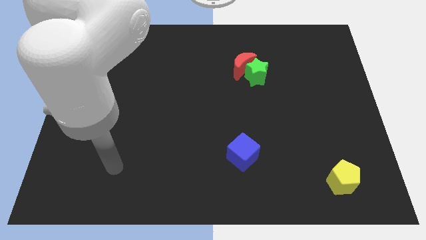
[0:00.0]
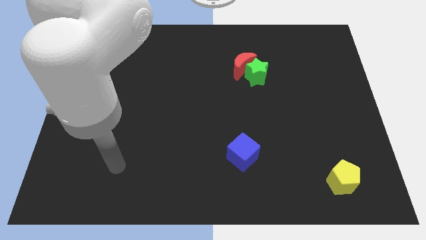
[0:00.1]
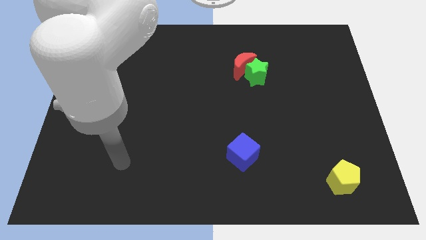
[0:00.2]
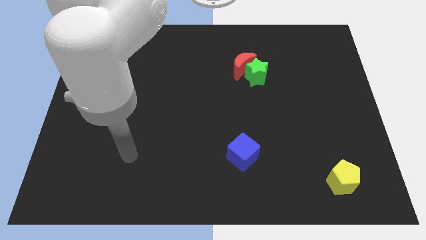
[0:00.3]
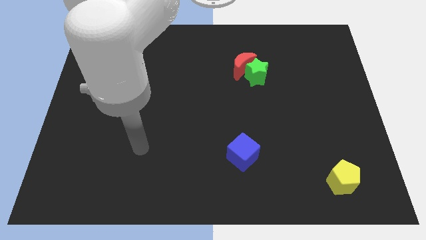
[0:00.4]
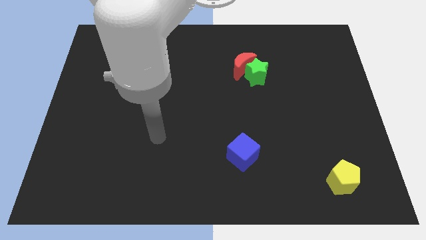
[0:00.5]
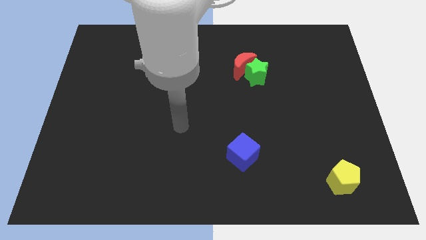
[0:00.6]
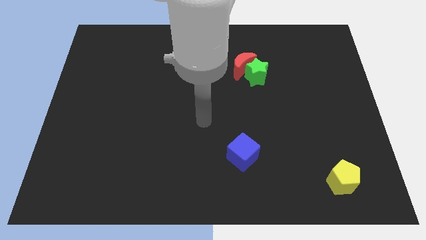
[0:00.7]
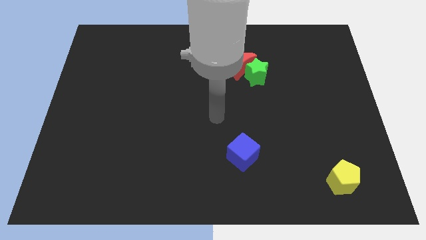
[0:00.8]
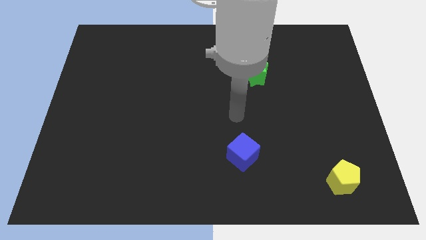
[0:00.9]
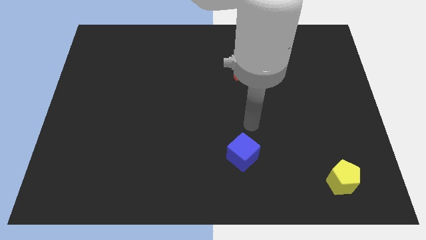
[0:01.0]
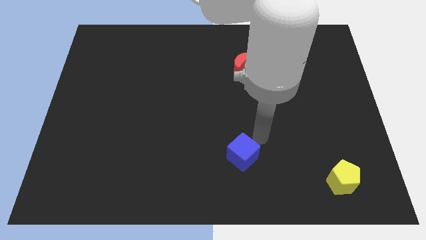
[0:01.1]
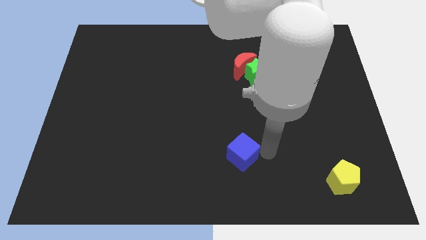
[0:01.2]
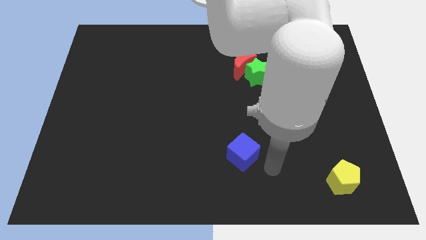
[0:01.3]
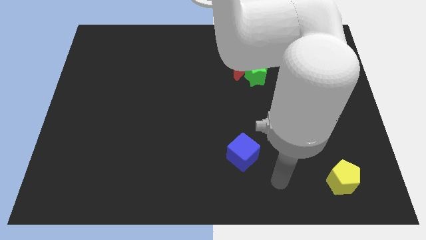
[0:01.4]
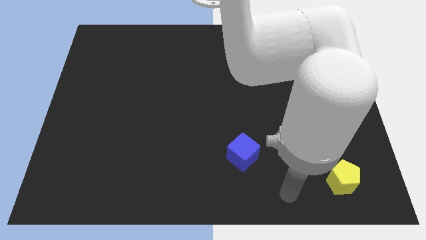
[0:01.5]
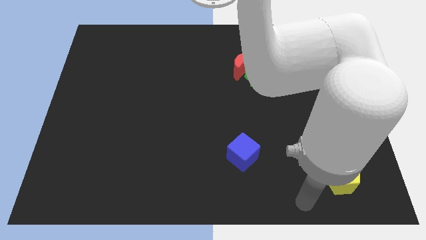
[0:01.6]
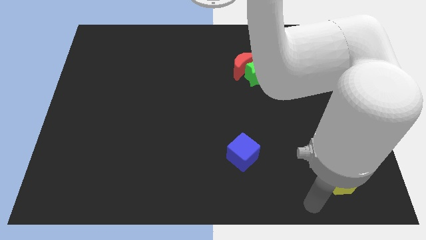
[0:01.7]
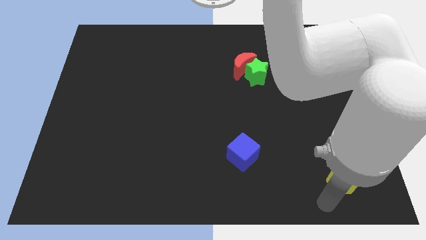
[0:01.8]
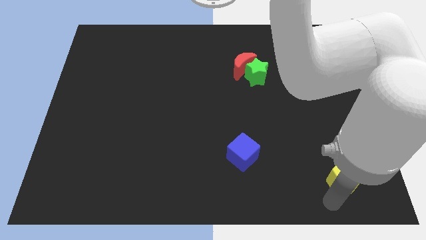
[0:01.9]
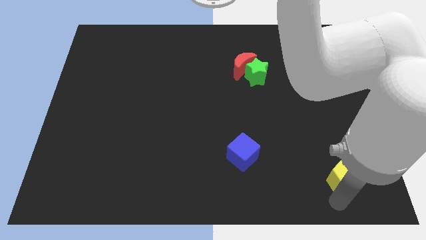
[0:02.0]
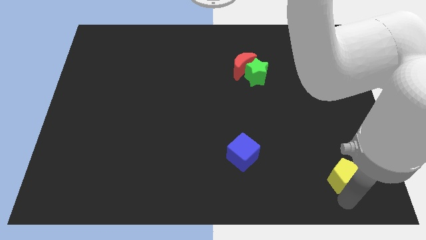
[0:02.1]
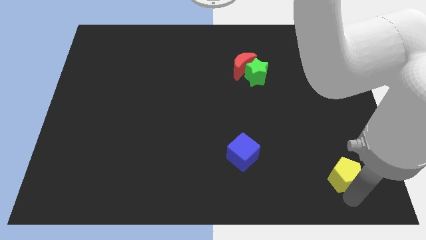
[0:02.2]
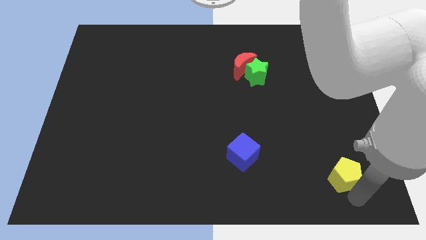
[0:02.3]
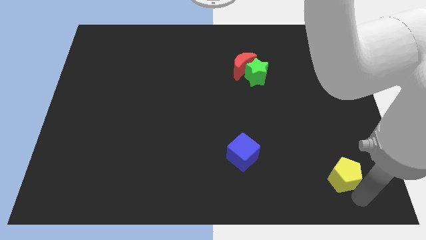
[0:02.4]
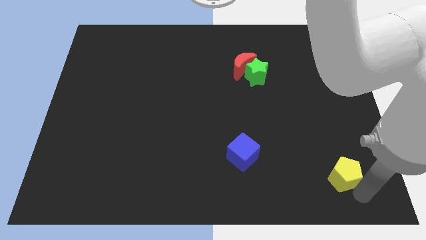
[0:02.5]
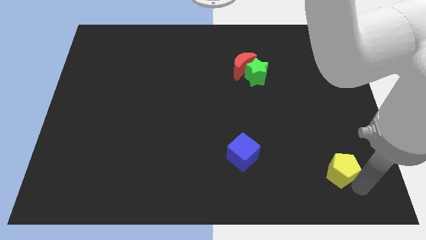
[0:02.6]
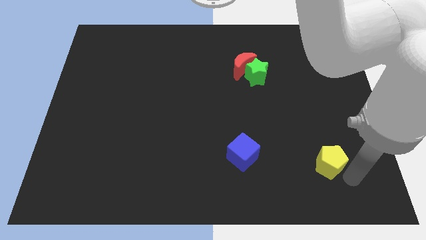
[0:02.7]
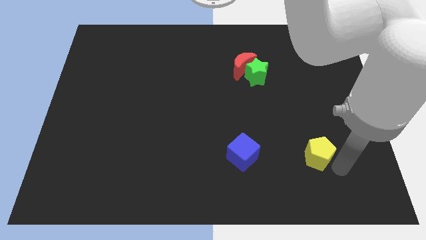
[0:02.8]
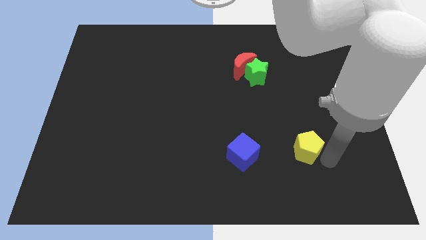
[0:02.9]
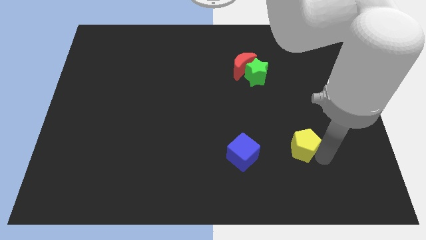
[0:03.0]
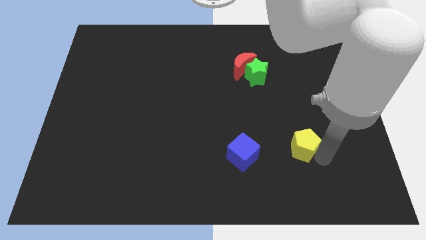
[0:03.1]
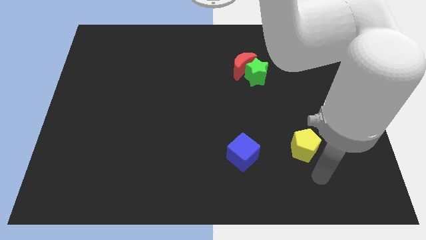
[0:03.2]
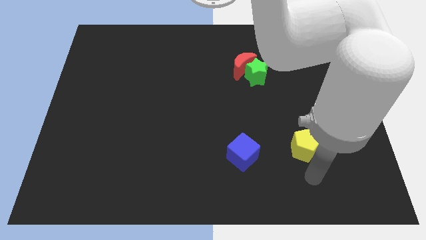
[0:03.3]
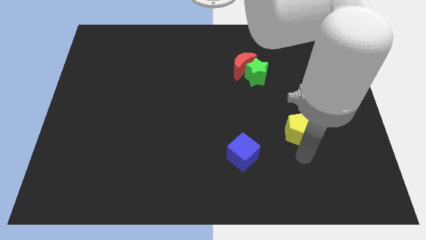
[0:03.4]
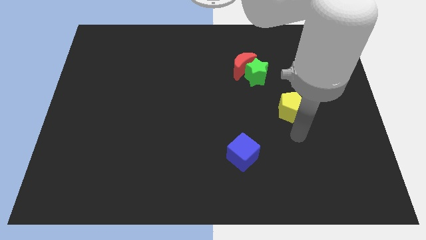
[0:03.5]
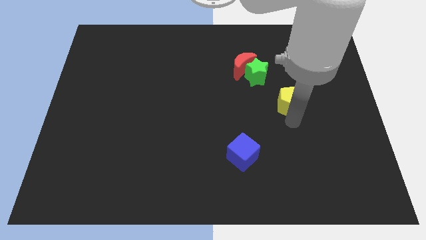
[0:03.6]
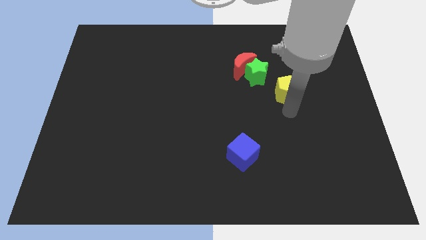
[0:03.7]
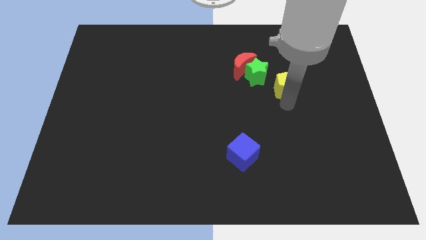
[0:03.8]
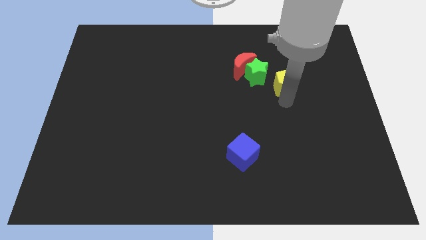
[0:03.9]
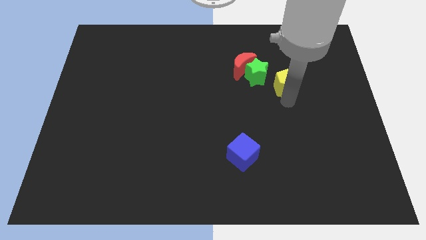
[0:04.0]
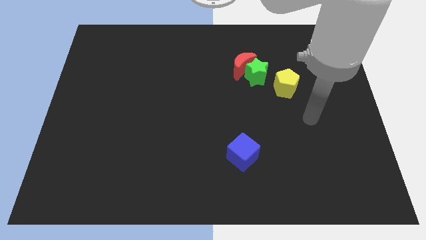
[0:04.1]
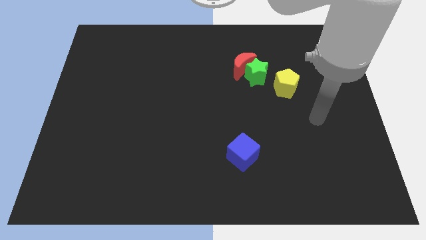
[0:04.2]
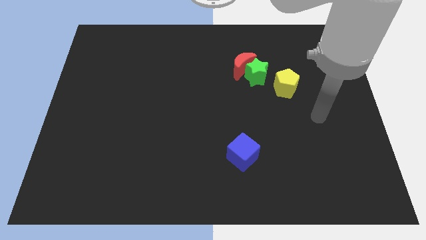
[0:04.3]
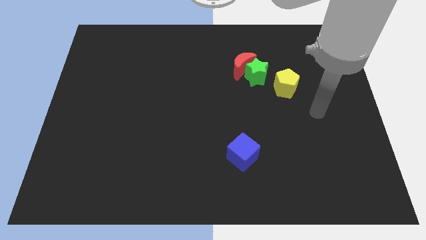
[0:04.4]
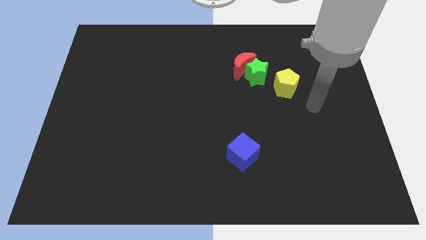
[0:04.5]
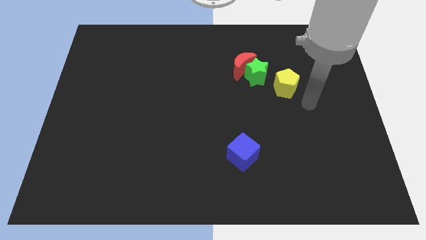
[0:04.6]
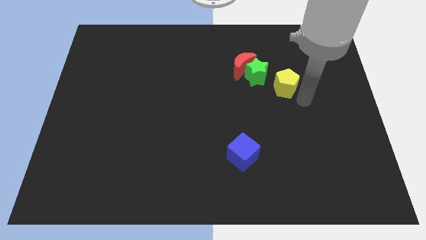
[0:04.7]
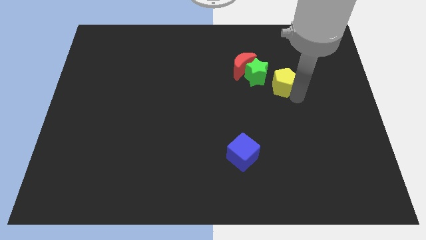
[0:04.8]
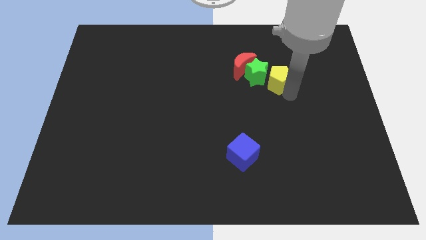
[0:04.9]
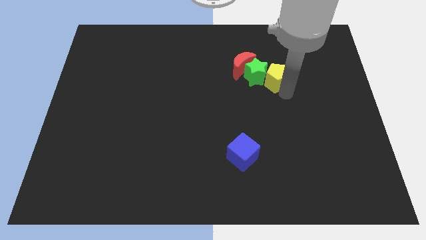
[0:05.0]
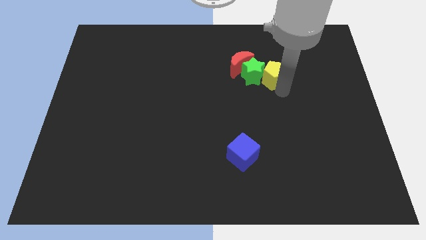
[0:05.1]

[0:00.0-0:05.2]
put the pentagon close to the green star

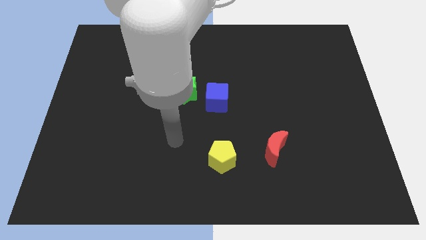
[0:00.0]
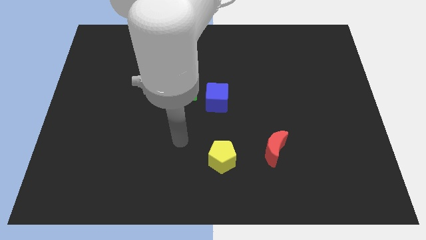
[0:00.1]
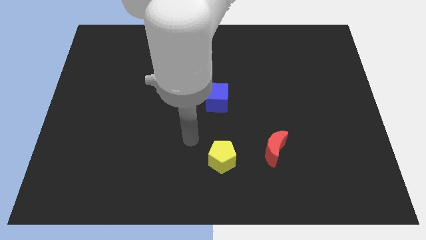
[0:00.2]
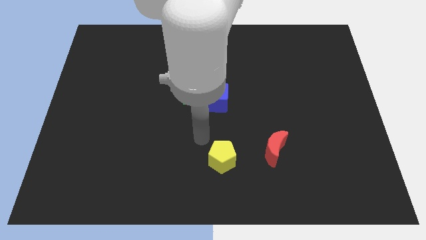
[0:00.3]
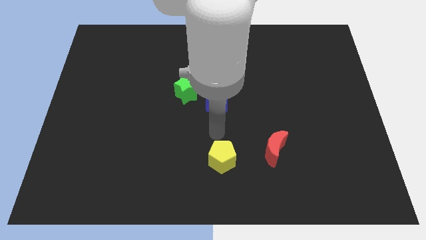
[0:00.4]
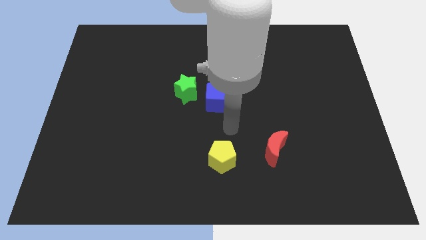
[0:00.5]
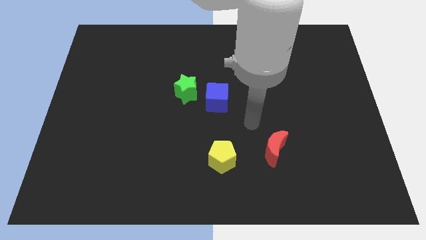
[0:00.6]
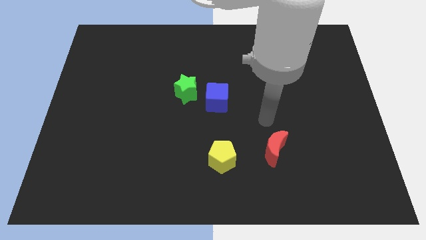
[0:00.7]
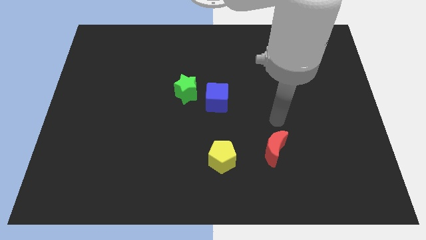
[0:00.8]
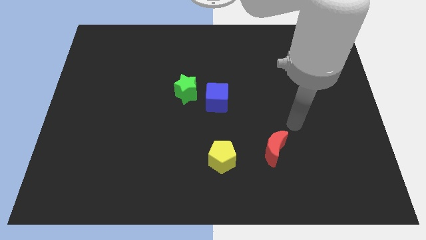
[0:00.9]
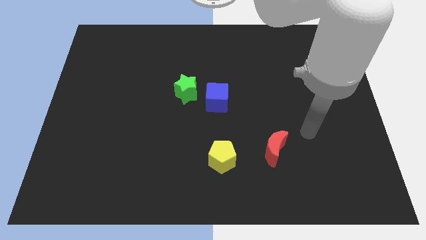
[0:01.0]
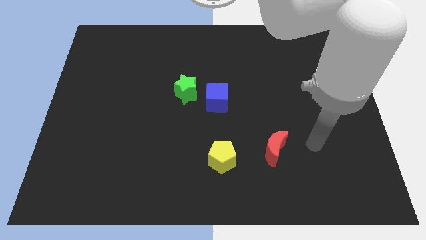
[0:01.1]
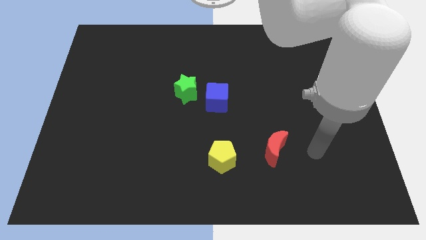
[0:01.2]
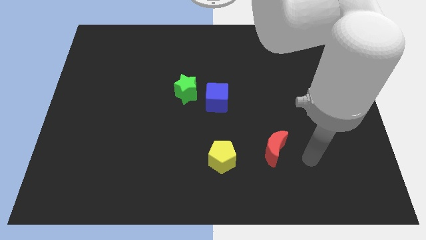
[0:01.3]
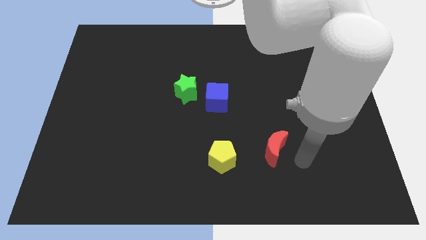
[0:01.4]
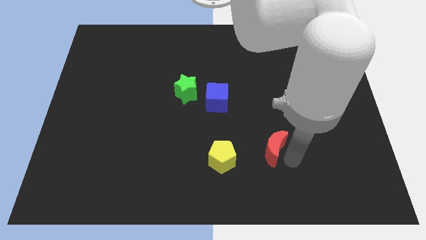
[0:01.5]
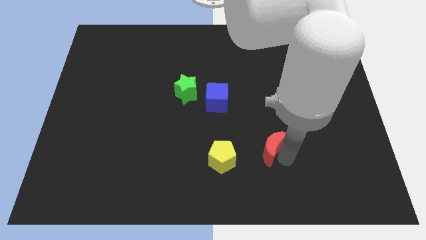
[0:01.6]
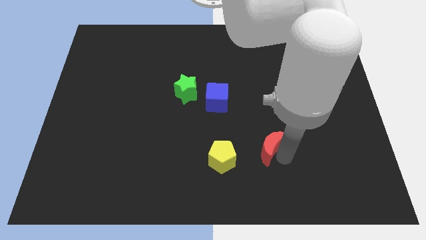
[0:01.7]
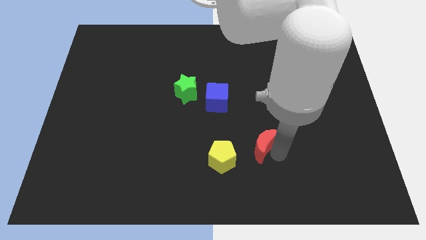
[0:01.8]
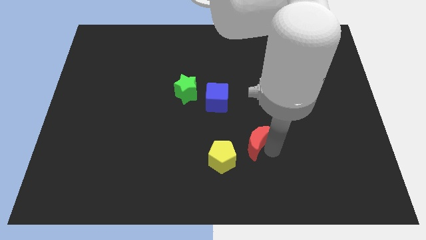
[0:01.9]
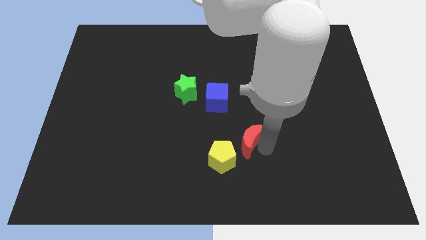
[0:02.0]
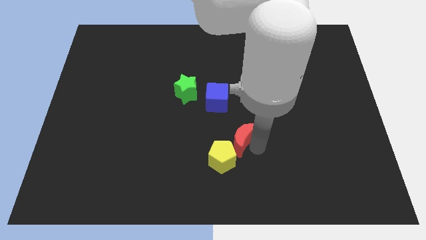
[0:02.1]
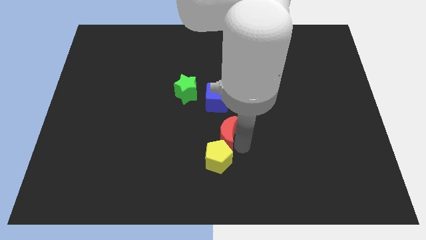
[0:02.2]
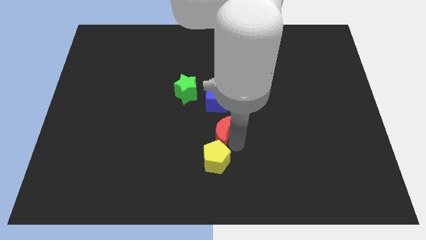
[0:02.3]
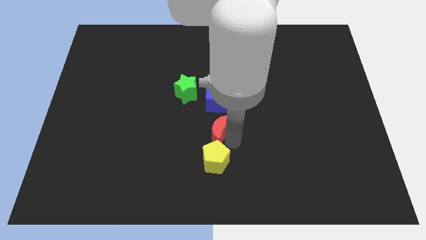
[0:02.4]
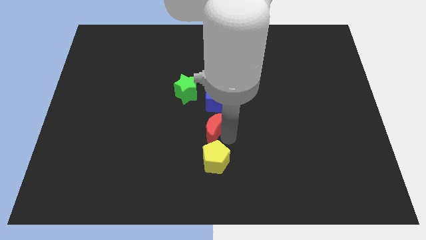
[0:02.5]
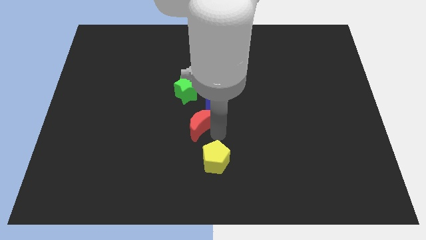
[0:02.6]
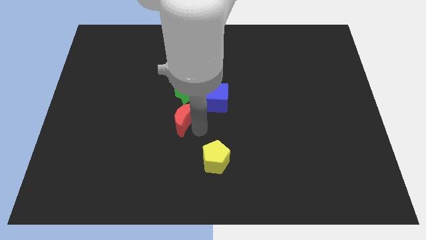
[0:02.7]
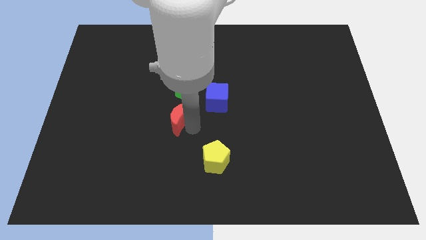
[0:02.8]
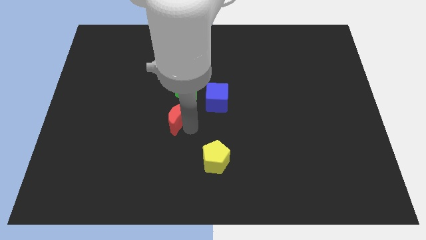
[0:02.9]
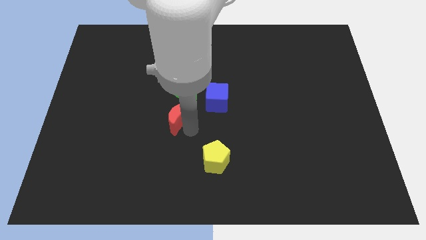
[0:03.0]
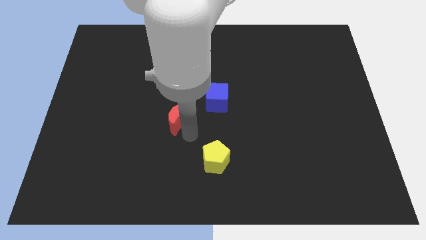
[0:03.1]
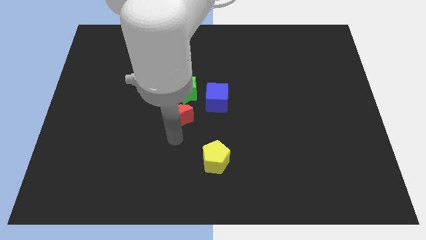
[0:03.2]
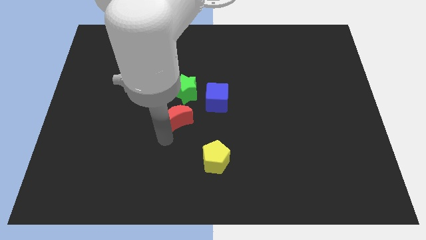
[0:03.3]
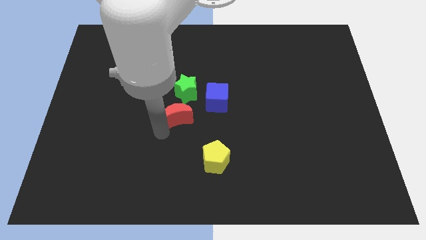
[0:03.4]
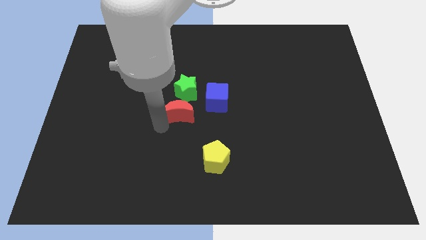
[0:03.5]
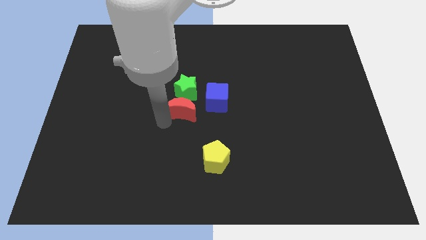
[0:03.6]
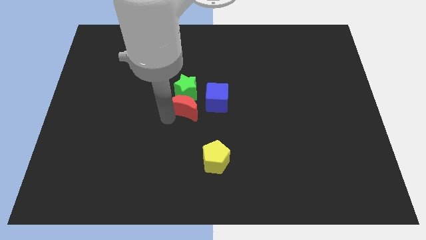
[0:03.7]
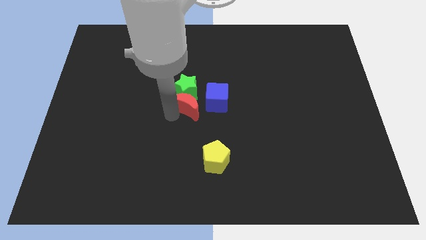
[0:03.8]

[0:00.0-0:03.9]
slide the moon towards the green star
